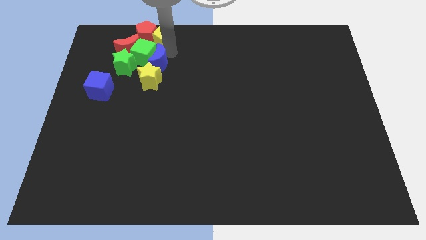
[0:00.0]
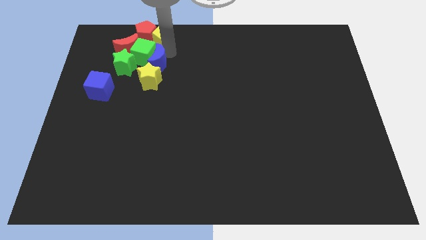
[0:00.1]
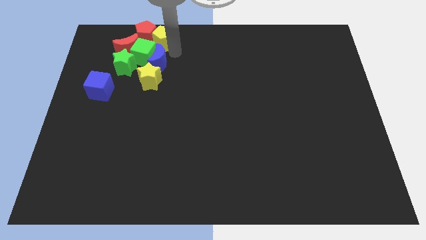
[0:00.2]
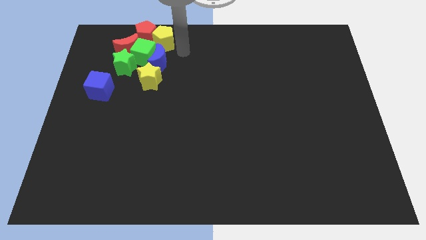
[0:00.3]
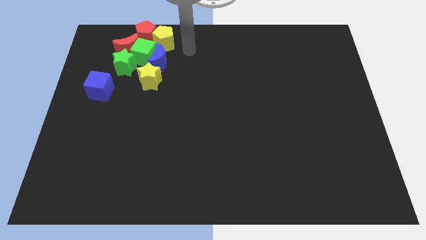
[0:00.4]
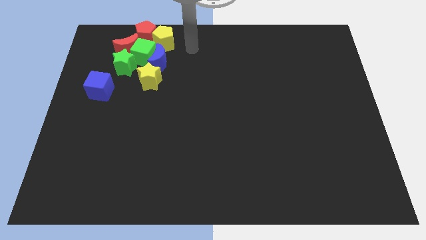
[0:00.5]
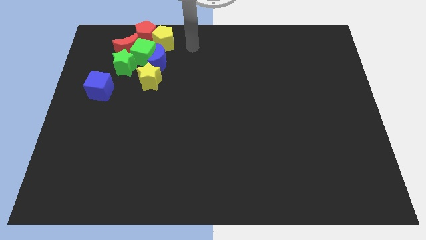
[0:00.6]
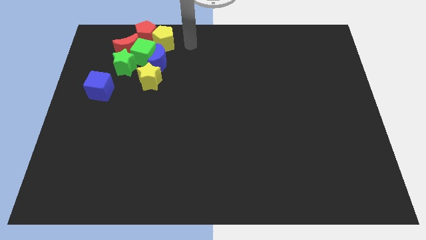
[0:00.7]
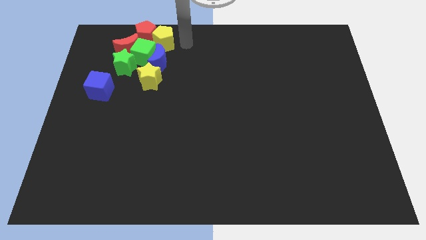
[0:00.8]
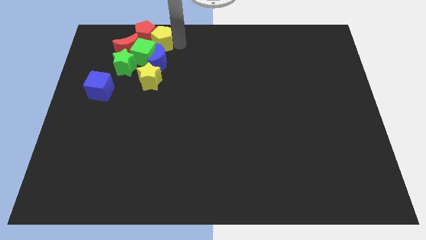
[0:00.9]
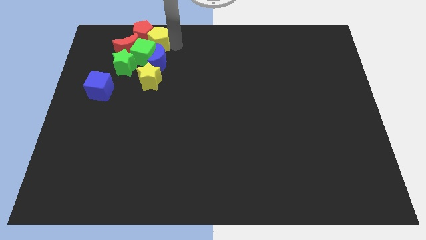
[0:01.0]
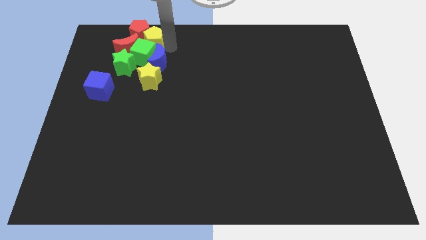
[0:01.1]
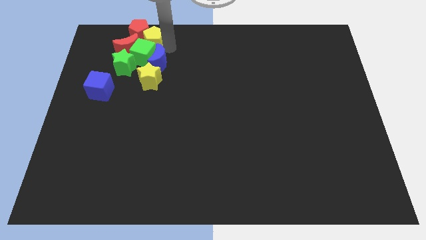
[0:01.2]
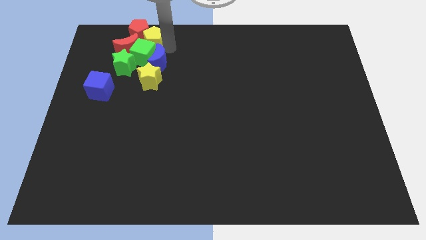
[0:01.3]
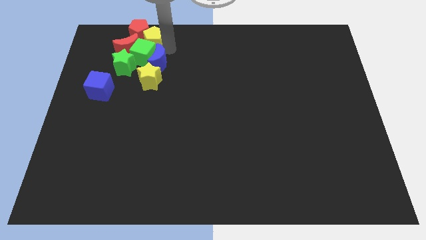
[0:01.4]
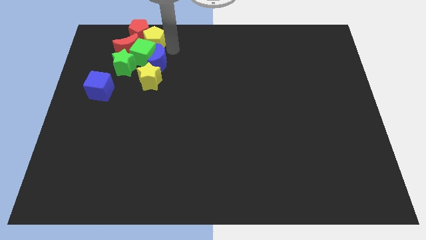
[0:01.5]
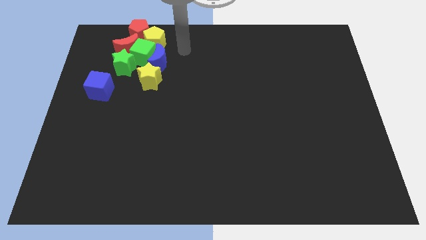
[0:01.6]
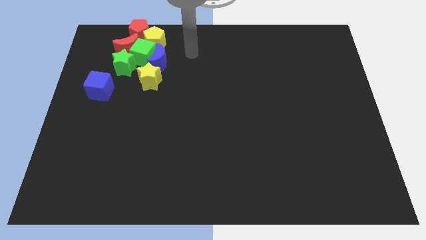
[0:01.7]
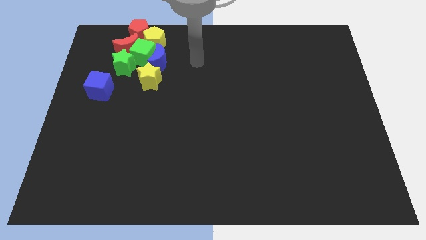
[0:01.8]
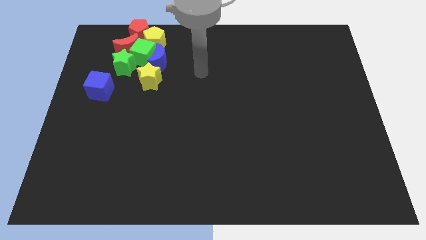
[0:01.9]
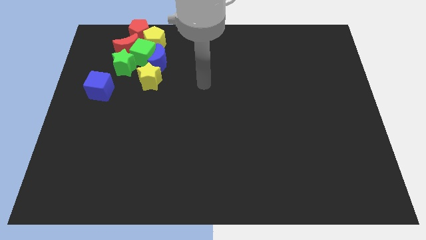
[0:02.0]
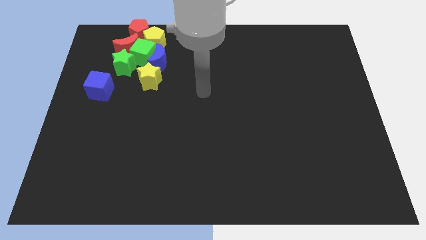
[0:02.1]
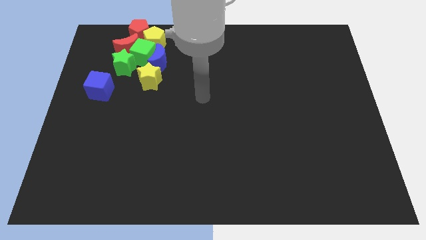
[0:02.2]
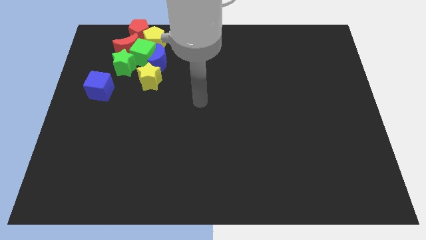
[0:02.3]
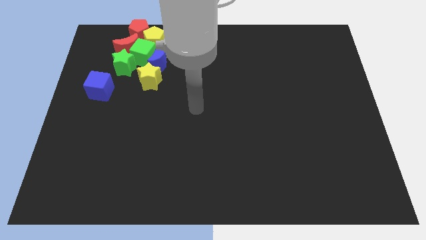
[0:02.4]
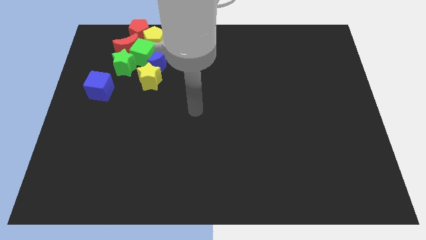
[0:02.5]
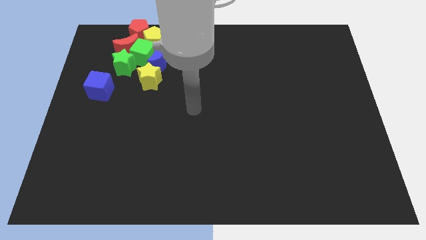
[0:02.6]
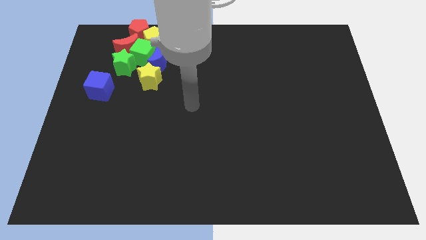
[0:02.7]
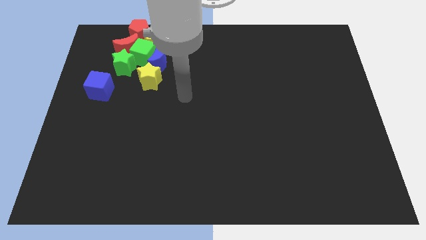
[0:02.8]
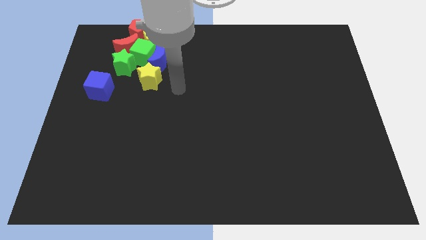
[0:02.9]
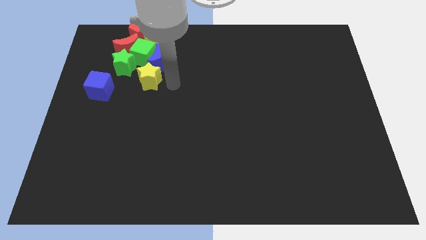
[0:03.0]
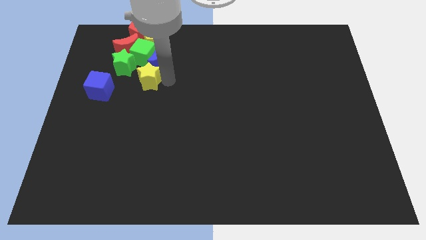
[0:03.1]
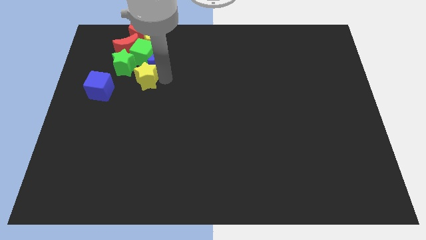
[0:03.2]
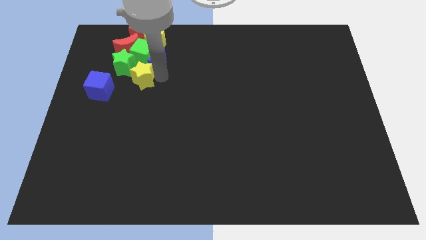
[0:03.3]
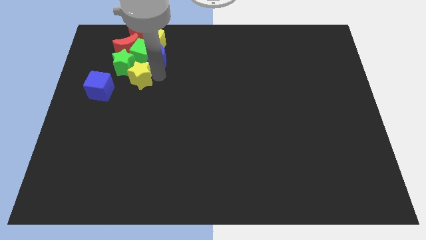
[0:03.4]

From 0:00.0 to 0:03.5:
place the arm right to the yellow star

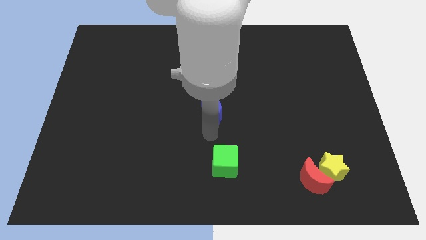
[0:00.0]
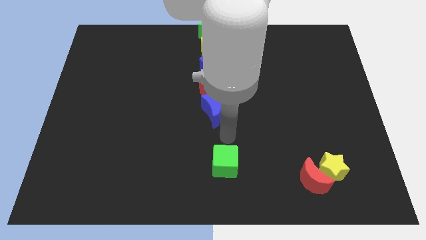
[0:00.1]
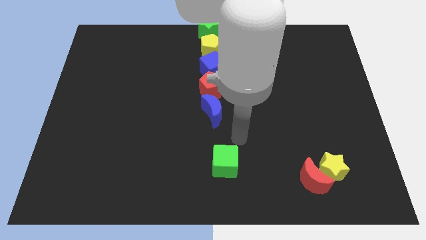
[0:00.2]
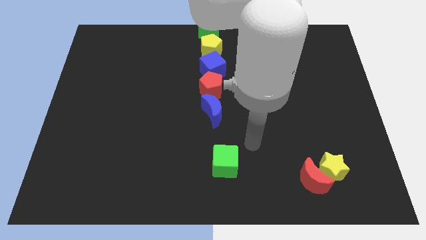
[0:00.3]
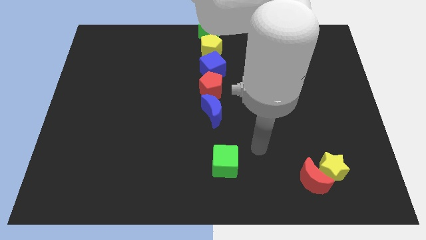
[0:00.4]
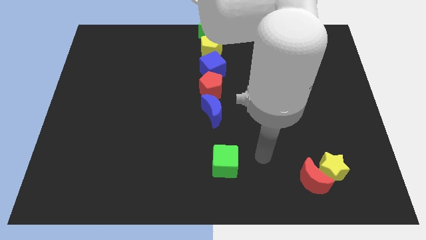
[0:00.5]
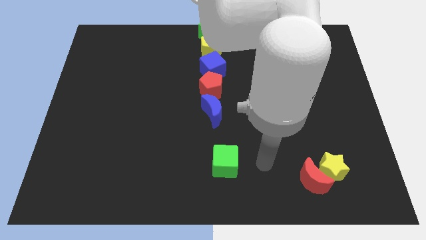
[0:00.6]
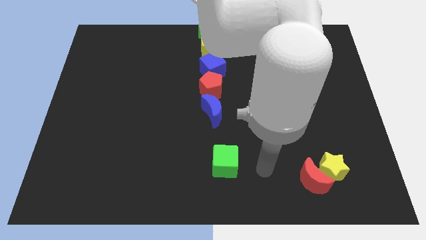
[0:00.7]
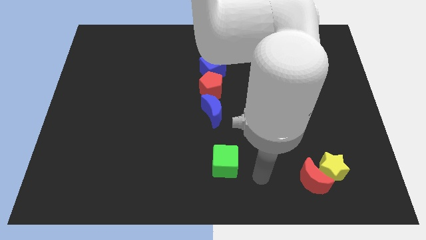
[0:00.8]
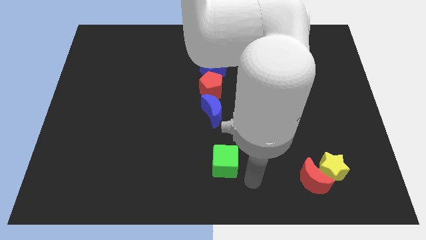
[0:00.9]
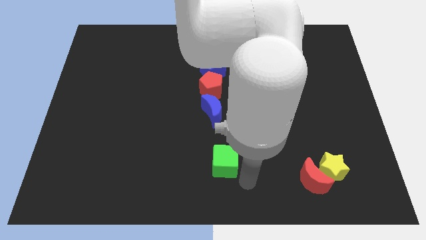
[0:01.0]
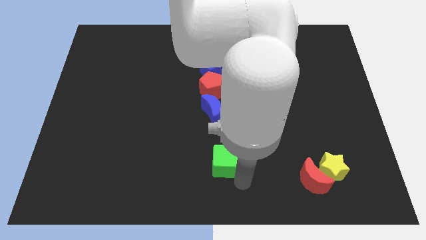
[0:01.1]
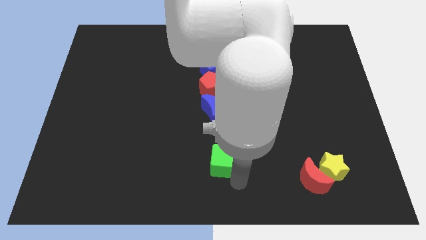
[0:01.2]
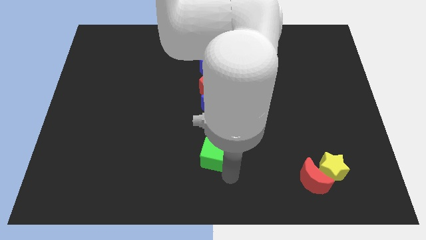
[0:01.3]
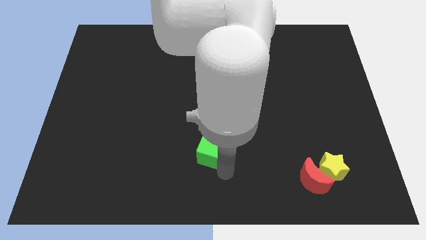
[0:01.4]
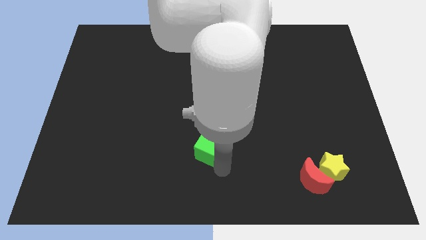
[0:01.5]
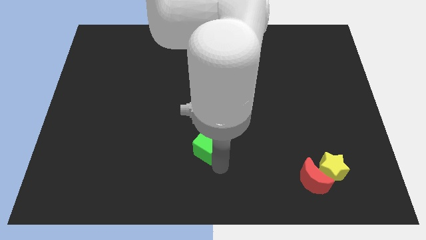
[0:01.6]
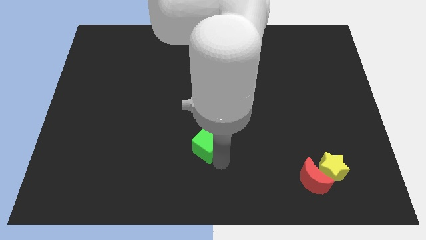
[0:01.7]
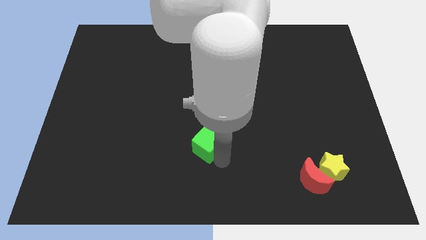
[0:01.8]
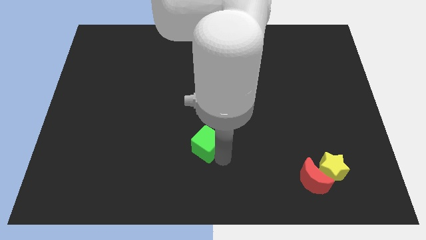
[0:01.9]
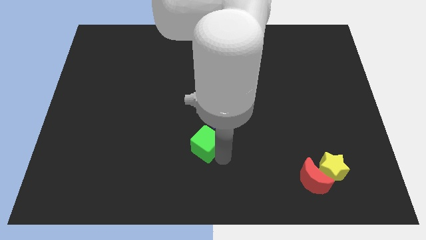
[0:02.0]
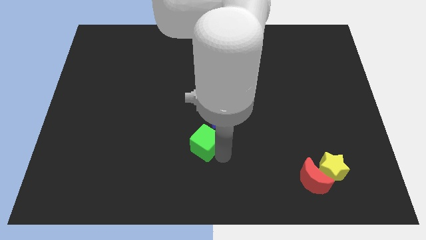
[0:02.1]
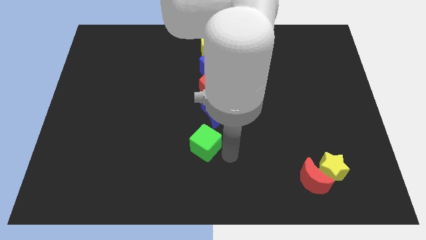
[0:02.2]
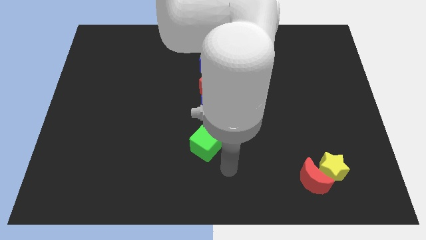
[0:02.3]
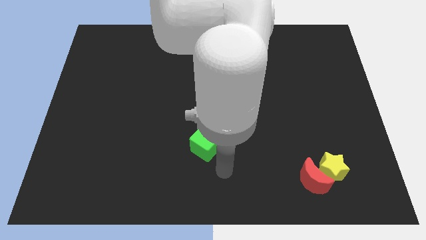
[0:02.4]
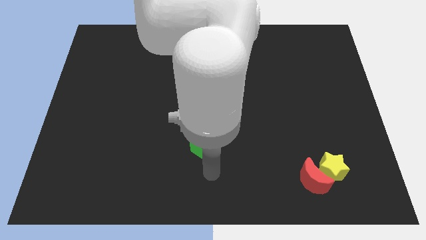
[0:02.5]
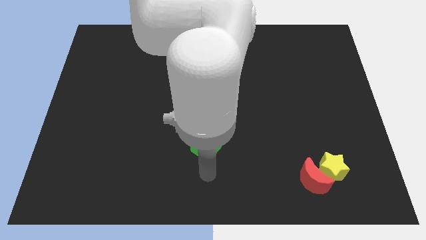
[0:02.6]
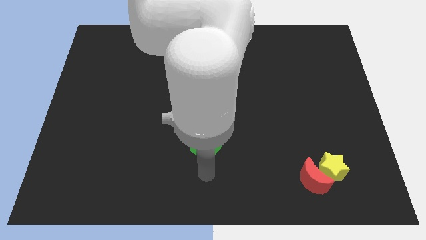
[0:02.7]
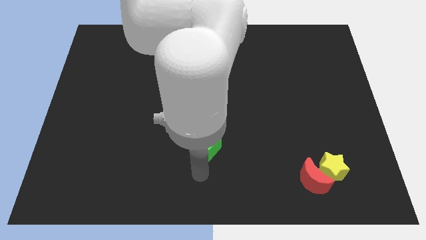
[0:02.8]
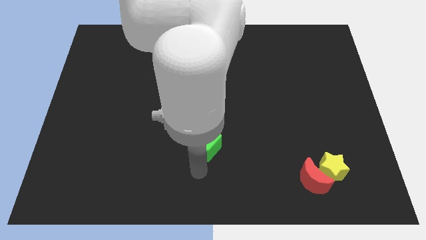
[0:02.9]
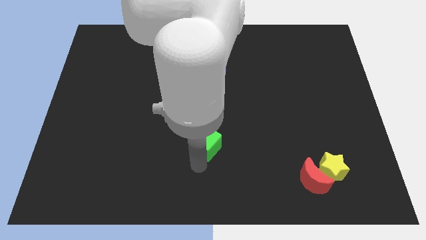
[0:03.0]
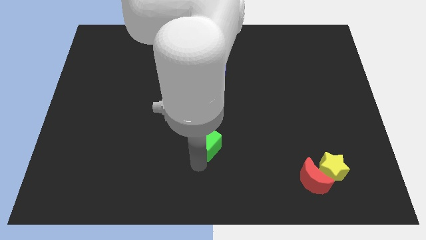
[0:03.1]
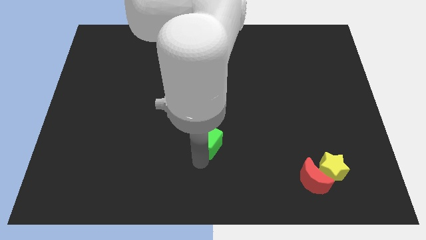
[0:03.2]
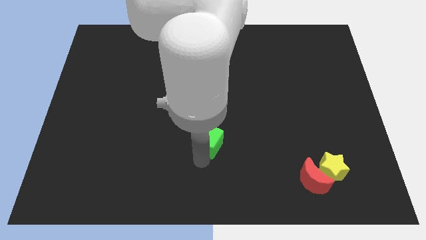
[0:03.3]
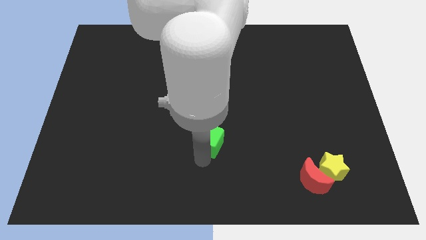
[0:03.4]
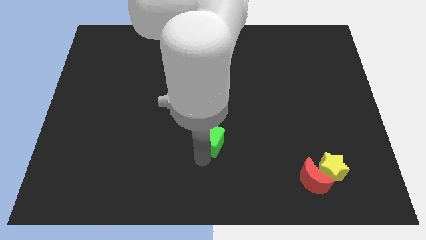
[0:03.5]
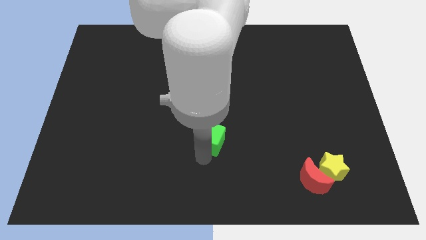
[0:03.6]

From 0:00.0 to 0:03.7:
push the green cube to the bottom of the blue crescent

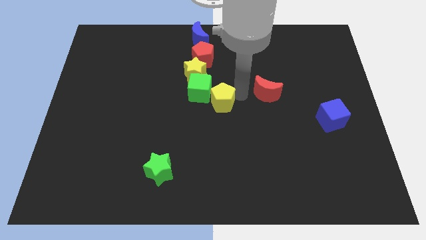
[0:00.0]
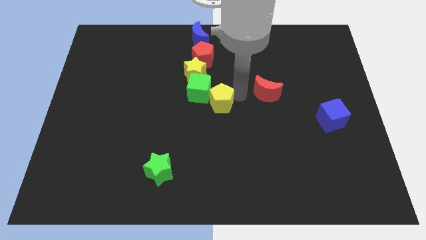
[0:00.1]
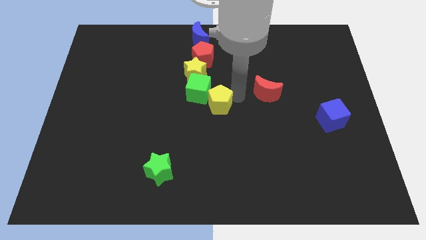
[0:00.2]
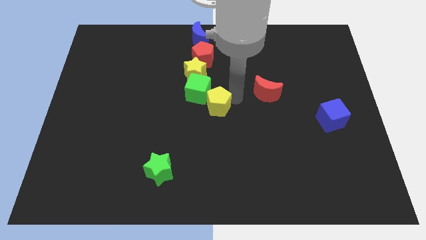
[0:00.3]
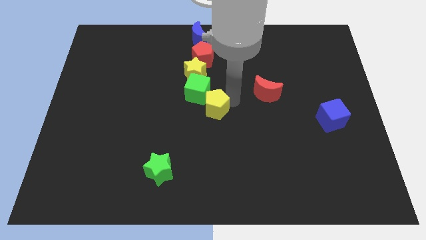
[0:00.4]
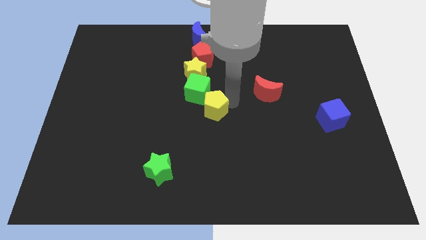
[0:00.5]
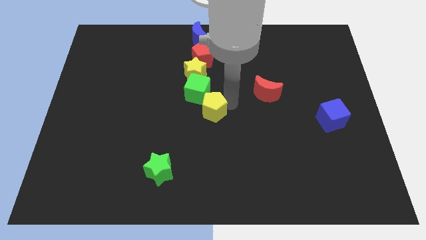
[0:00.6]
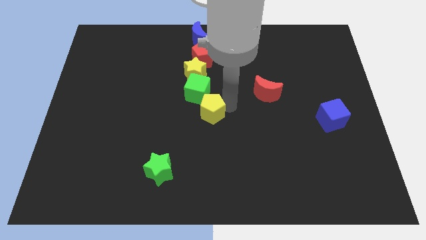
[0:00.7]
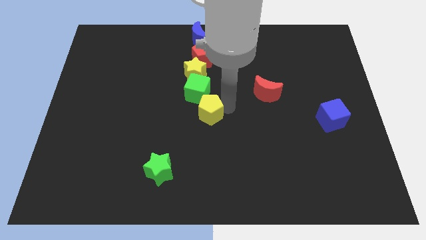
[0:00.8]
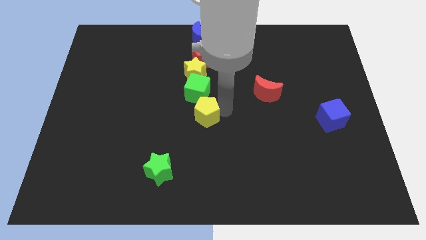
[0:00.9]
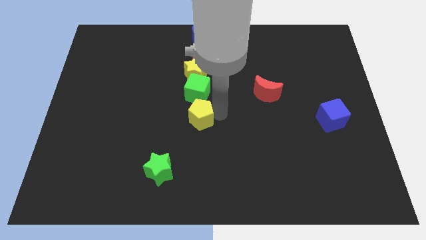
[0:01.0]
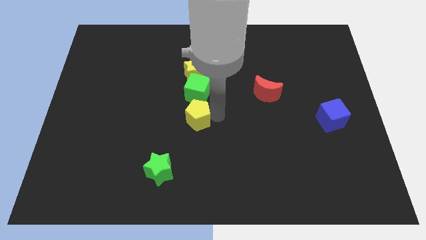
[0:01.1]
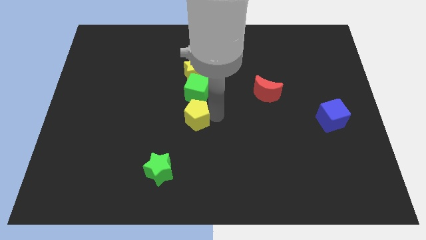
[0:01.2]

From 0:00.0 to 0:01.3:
place the yellow pentagon below the green cube

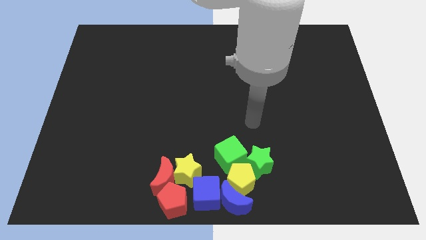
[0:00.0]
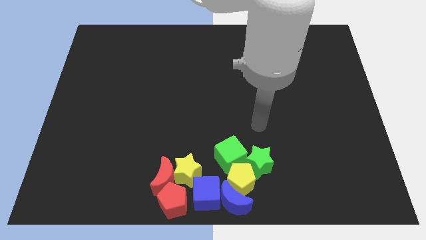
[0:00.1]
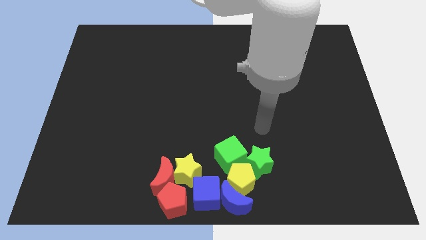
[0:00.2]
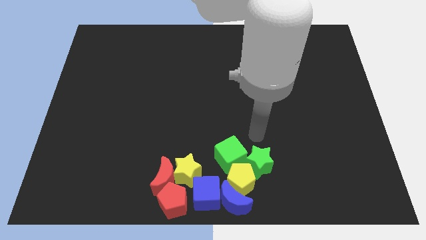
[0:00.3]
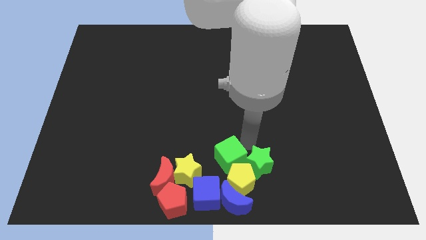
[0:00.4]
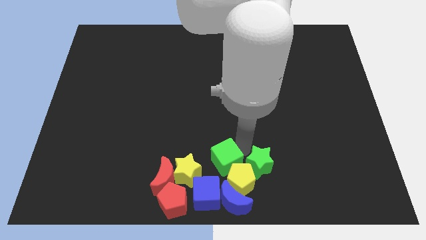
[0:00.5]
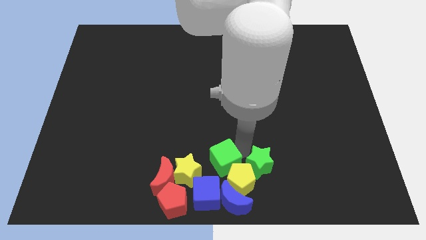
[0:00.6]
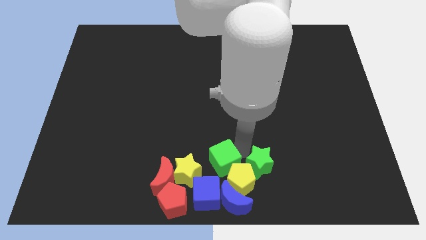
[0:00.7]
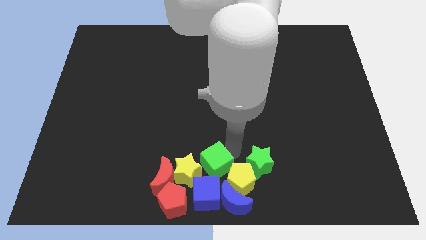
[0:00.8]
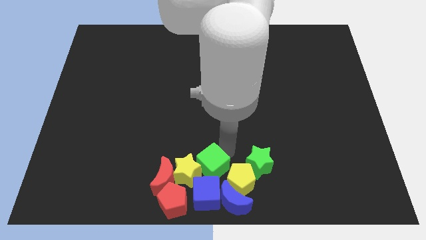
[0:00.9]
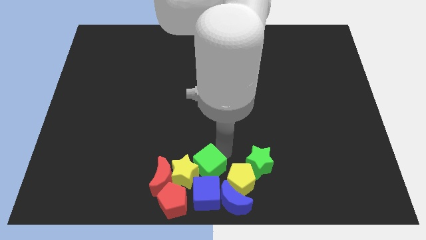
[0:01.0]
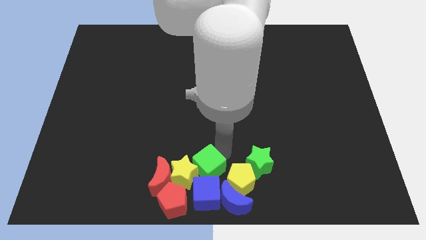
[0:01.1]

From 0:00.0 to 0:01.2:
push the green cube into the yellow star
